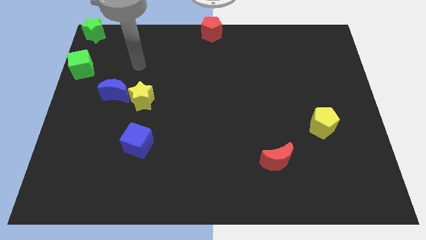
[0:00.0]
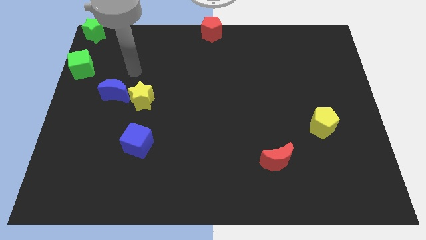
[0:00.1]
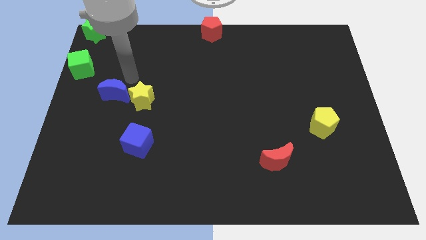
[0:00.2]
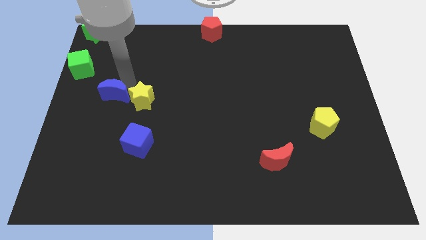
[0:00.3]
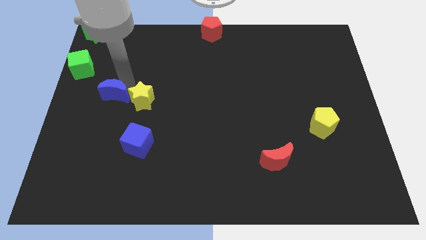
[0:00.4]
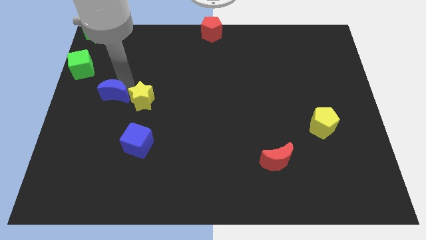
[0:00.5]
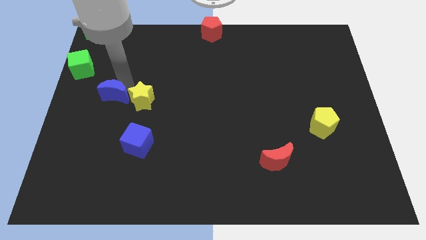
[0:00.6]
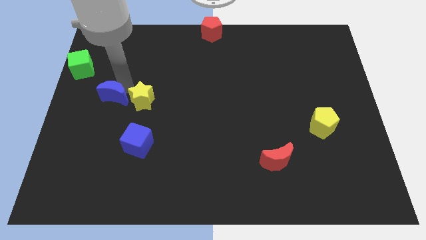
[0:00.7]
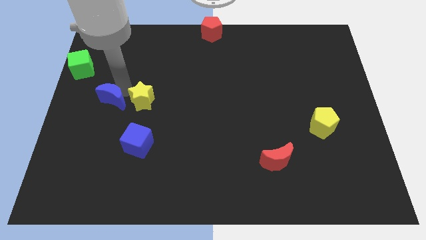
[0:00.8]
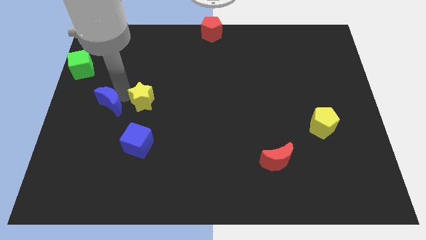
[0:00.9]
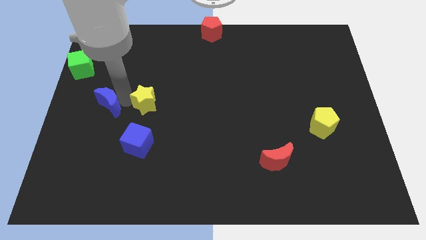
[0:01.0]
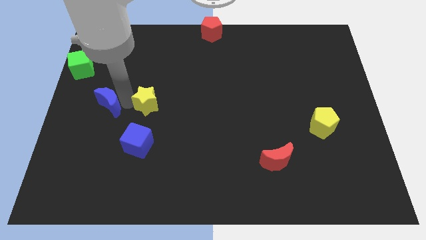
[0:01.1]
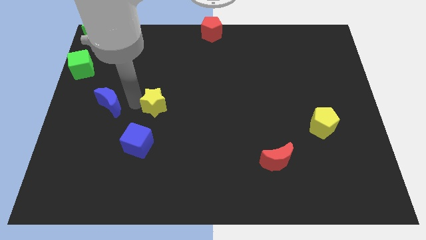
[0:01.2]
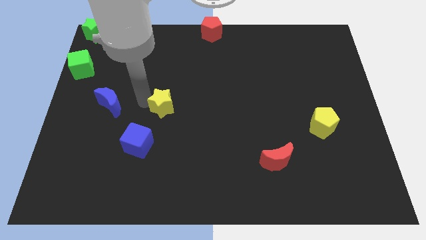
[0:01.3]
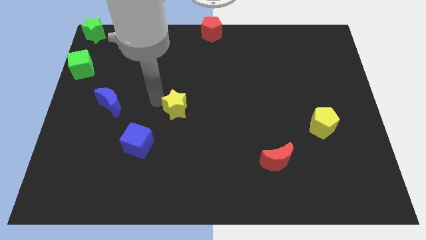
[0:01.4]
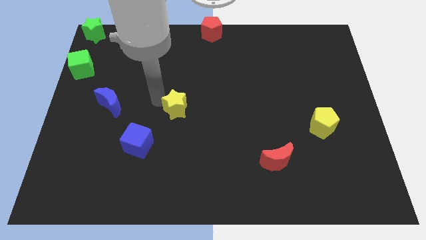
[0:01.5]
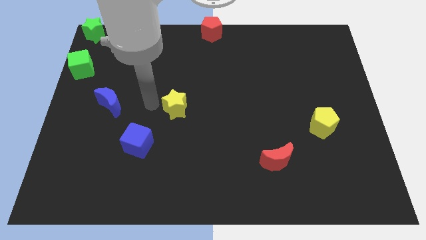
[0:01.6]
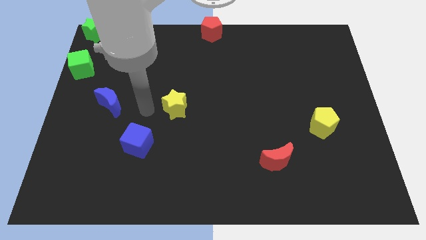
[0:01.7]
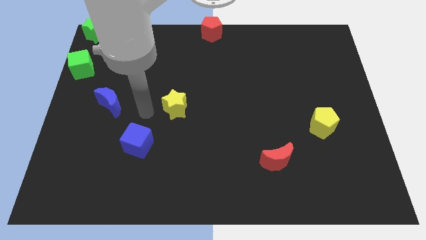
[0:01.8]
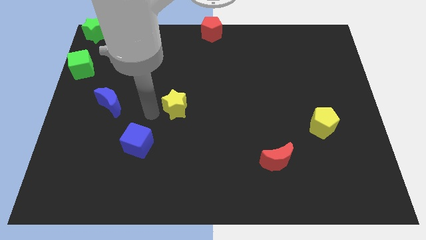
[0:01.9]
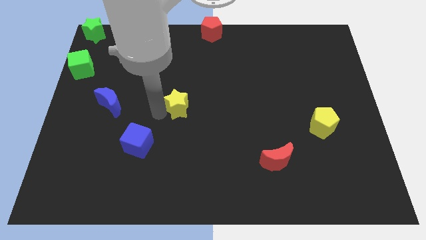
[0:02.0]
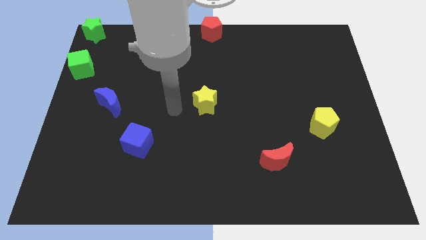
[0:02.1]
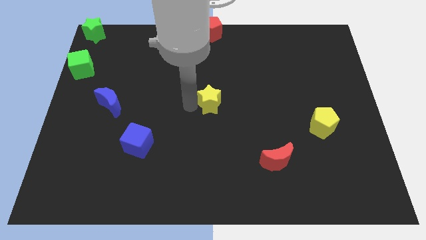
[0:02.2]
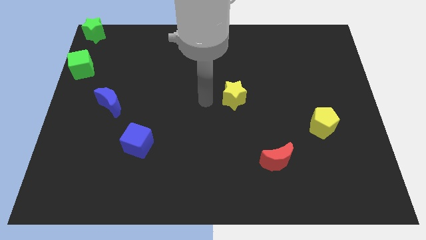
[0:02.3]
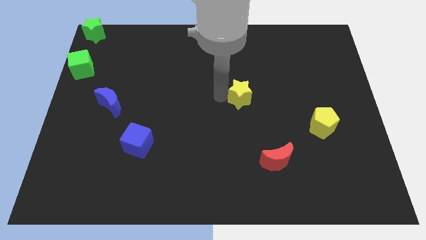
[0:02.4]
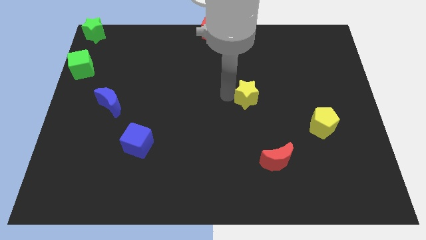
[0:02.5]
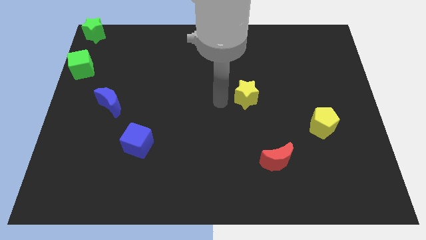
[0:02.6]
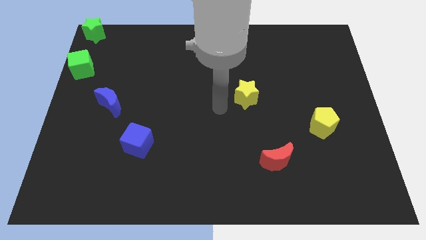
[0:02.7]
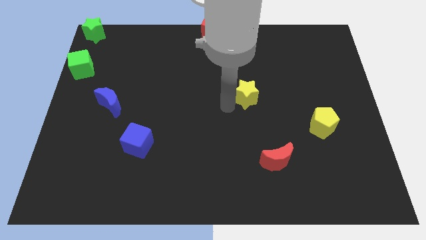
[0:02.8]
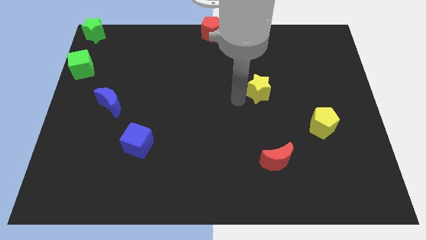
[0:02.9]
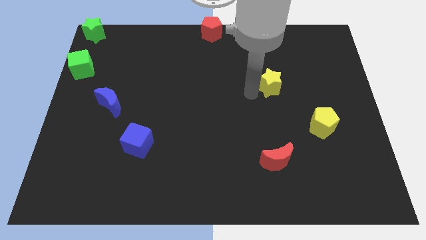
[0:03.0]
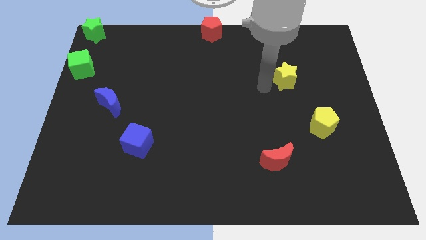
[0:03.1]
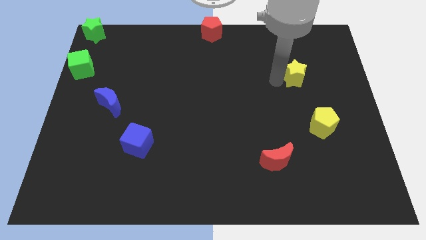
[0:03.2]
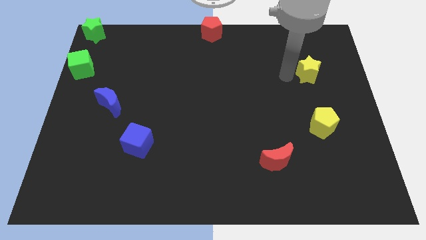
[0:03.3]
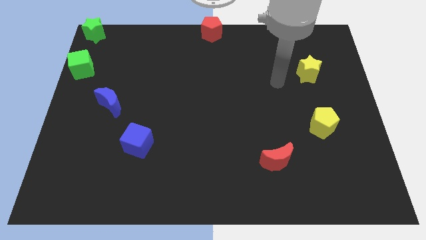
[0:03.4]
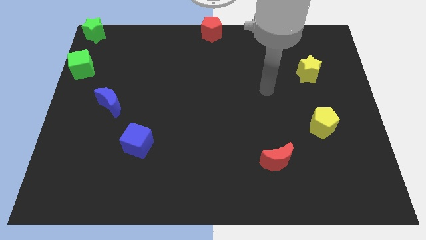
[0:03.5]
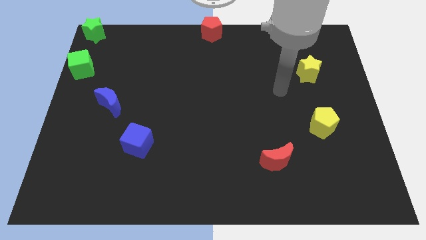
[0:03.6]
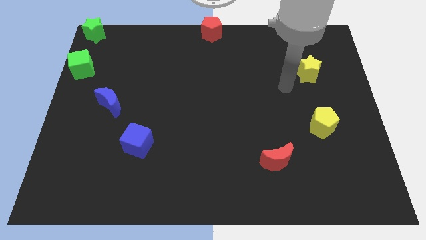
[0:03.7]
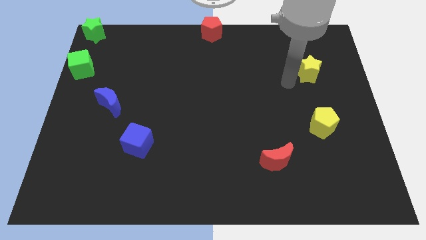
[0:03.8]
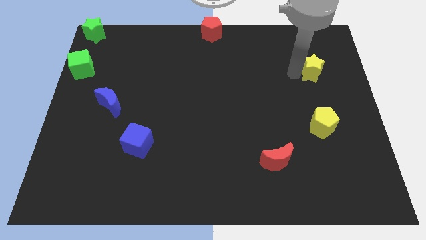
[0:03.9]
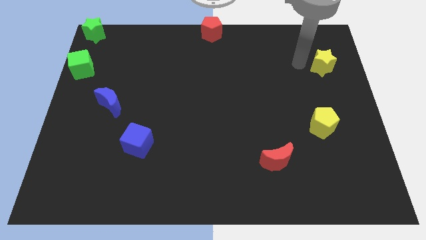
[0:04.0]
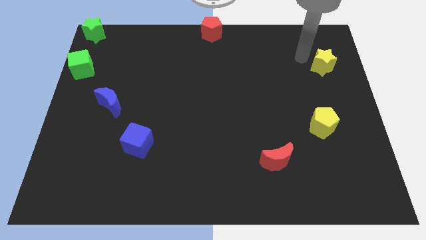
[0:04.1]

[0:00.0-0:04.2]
put the yellow star vertically above the yellow pentagon

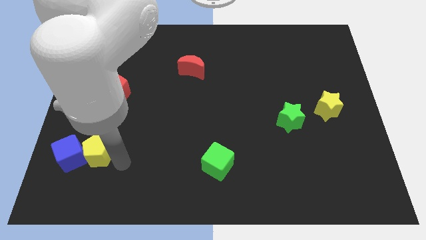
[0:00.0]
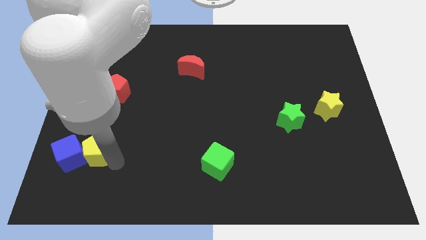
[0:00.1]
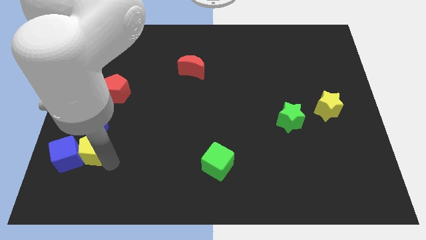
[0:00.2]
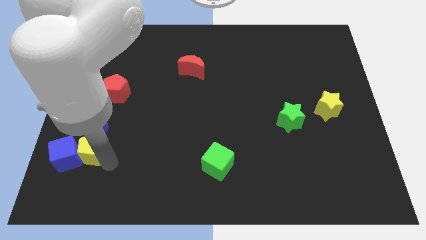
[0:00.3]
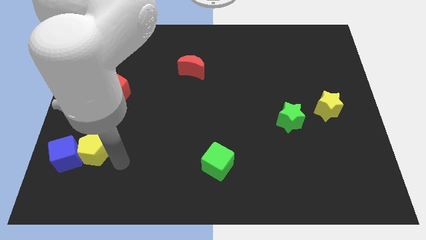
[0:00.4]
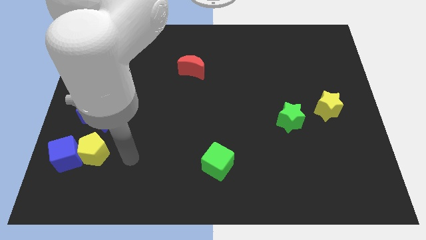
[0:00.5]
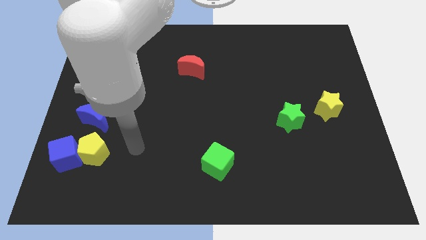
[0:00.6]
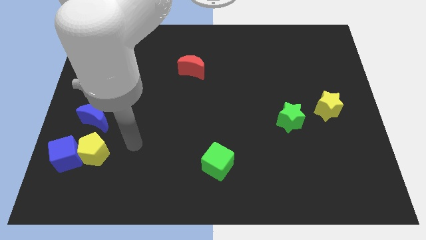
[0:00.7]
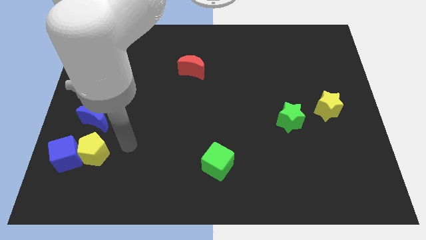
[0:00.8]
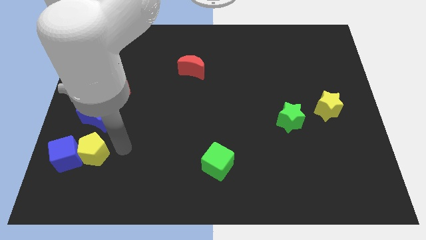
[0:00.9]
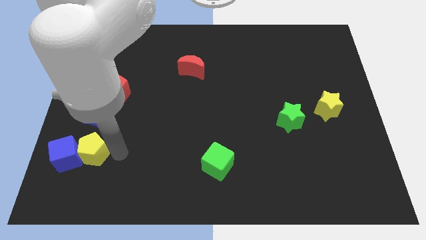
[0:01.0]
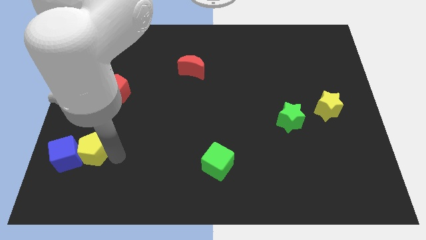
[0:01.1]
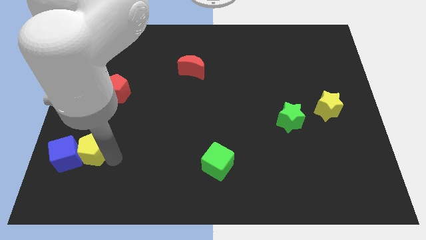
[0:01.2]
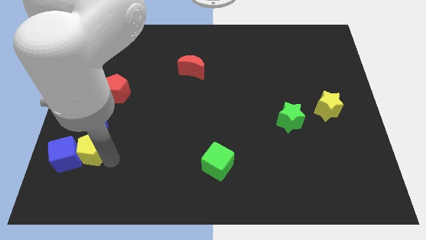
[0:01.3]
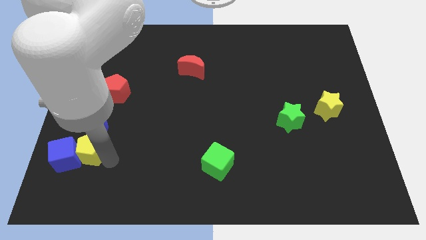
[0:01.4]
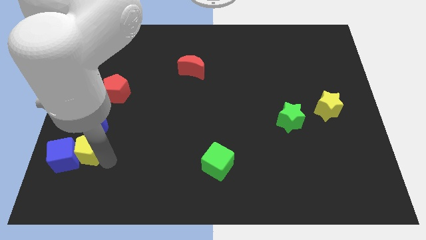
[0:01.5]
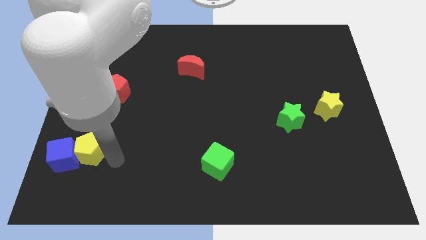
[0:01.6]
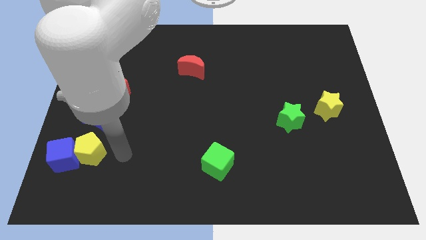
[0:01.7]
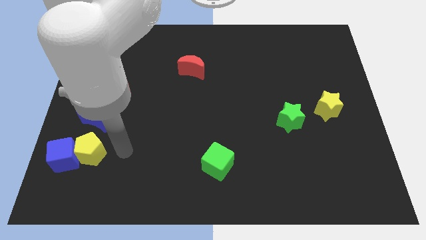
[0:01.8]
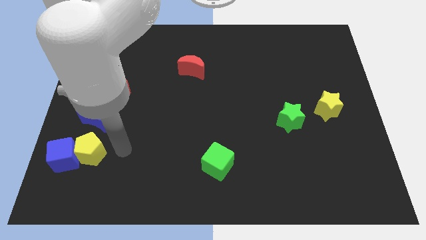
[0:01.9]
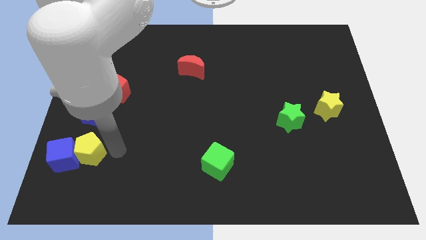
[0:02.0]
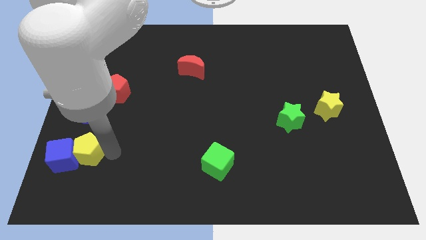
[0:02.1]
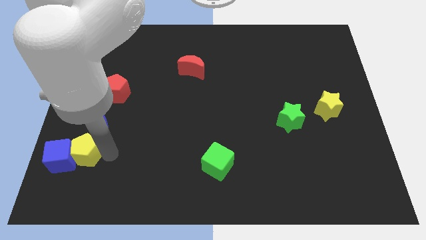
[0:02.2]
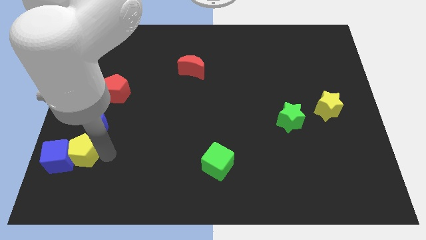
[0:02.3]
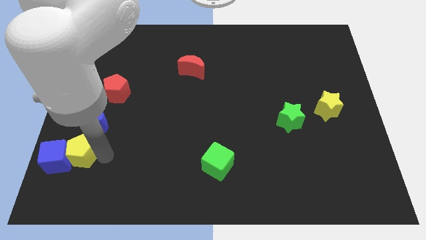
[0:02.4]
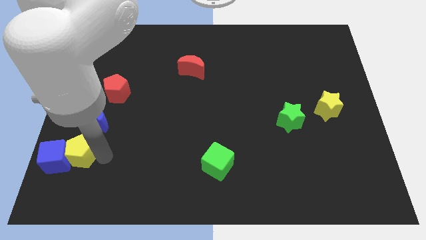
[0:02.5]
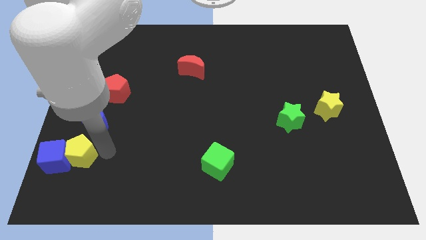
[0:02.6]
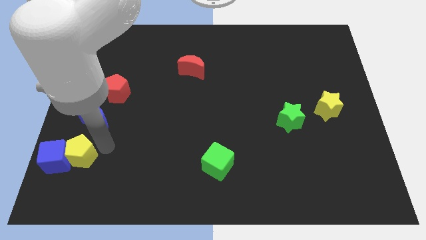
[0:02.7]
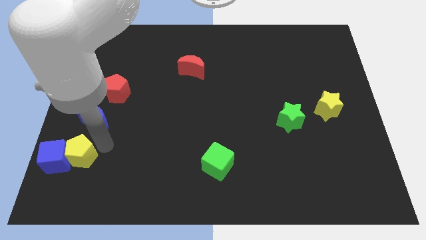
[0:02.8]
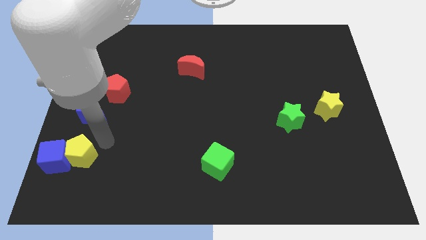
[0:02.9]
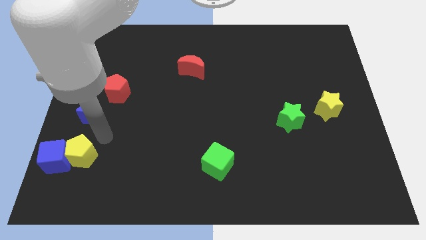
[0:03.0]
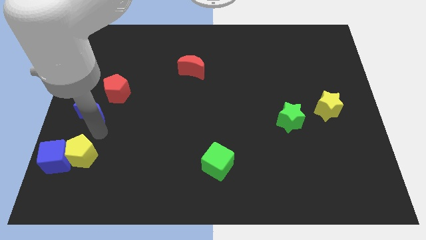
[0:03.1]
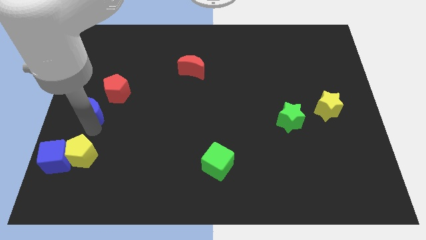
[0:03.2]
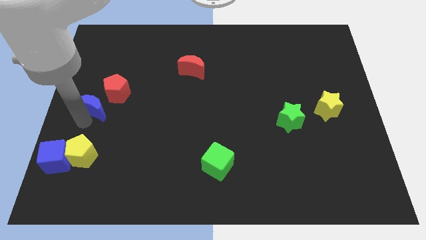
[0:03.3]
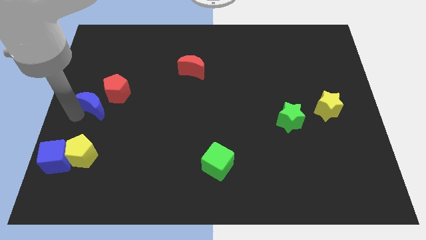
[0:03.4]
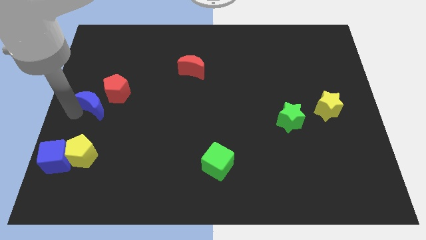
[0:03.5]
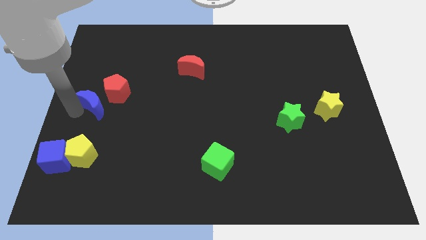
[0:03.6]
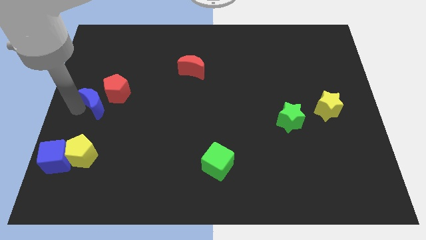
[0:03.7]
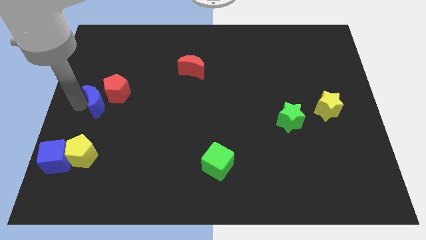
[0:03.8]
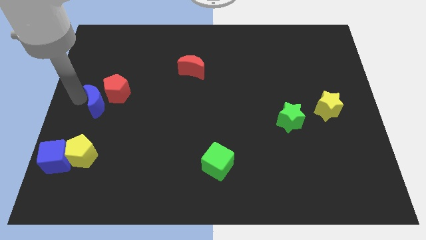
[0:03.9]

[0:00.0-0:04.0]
push yellow pentagon along with blue cube to teh left

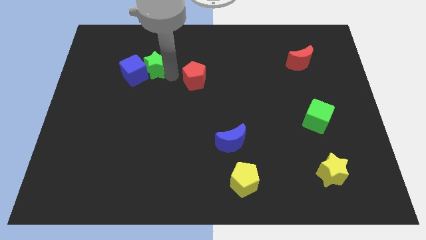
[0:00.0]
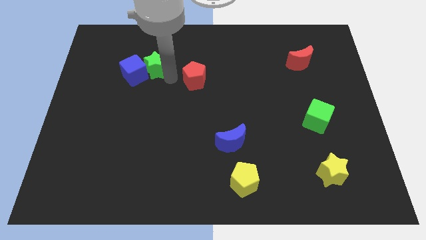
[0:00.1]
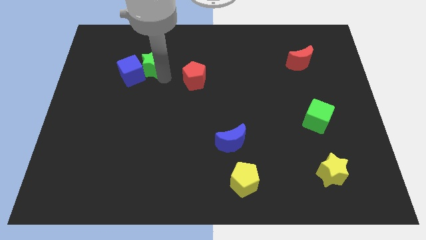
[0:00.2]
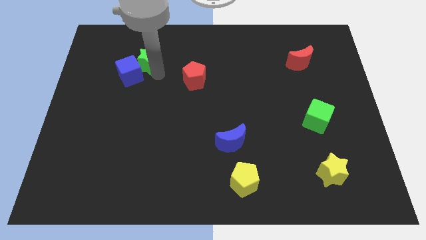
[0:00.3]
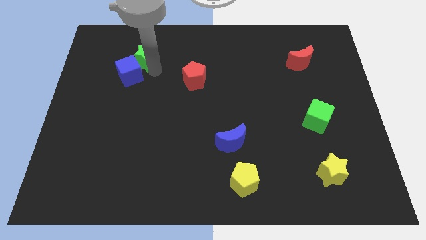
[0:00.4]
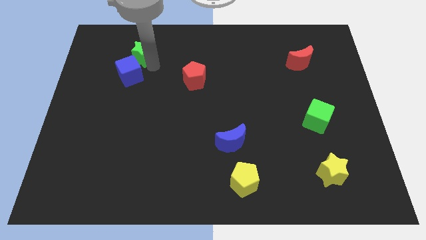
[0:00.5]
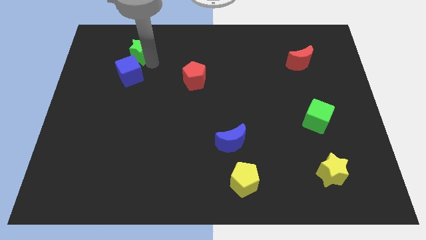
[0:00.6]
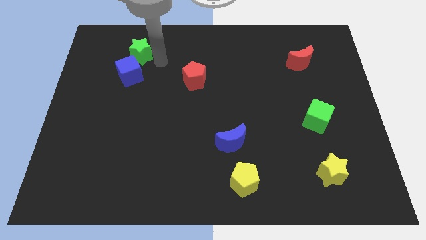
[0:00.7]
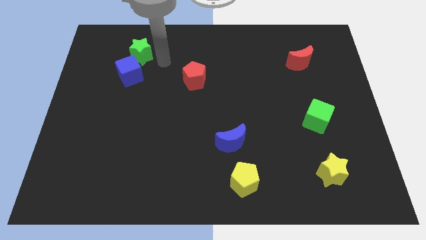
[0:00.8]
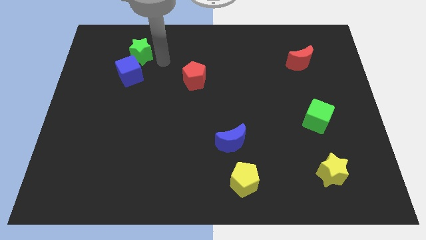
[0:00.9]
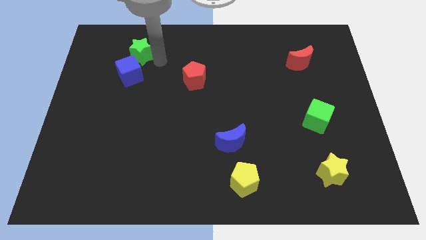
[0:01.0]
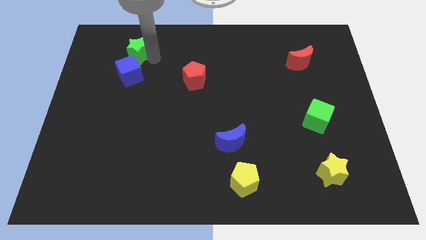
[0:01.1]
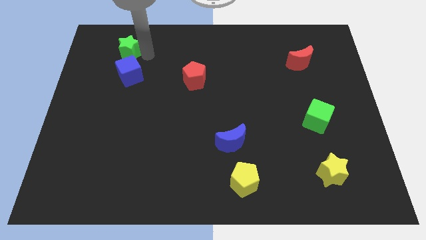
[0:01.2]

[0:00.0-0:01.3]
move the green star at the top side of the blue cube
